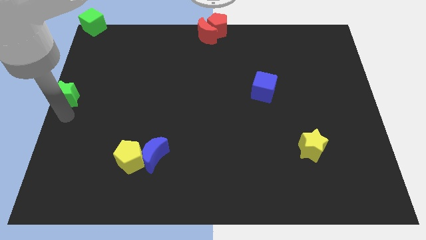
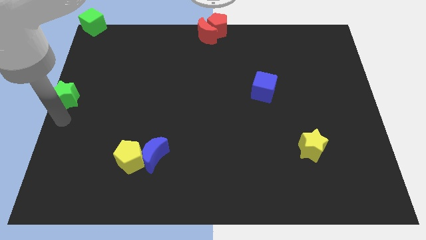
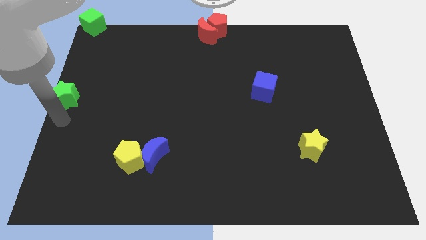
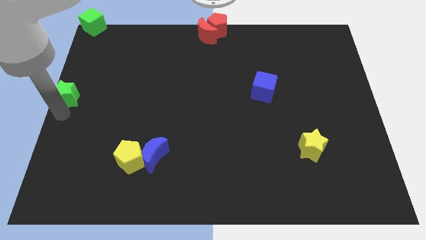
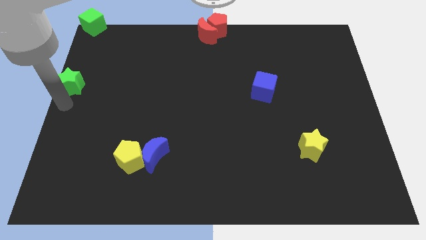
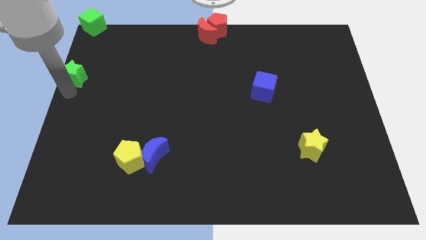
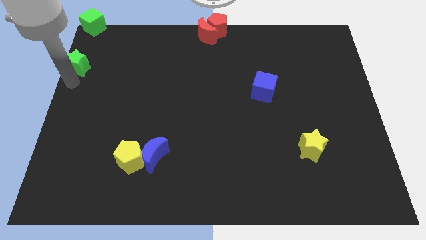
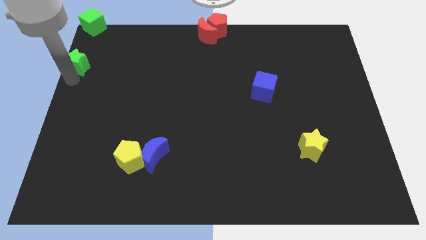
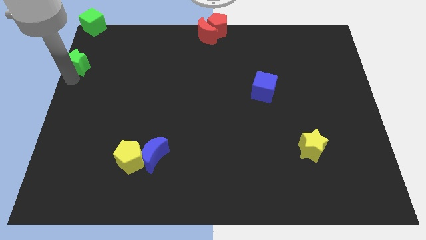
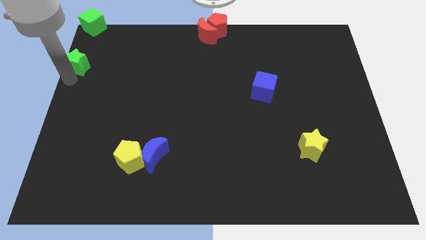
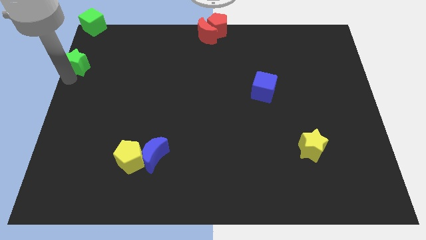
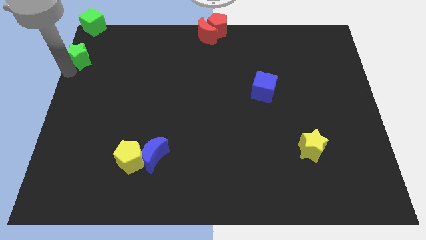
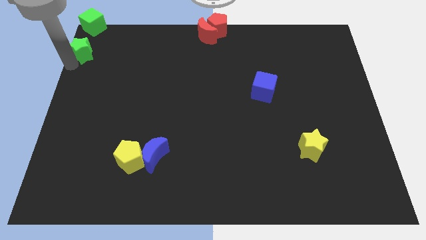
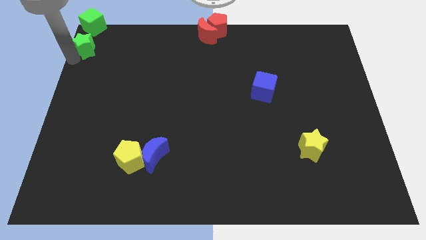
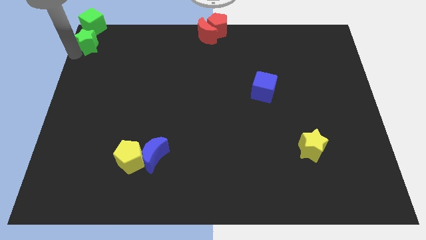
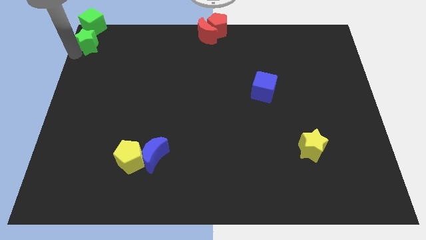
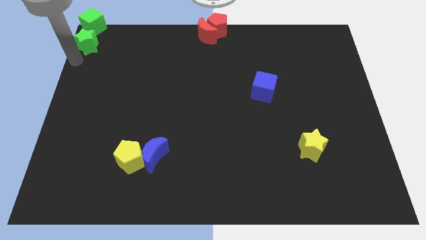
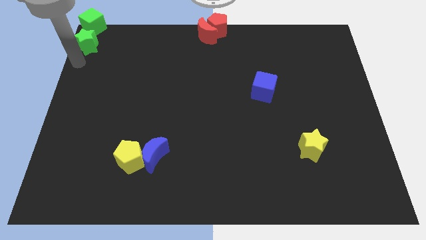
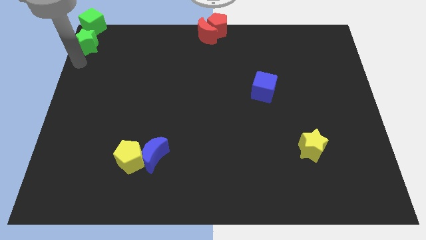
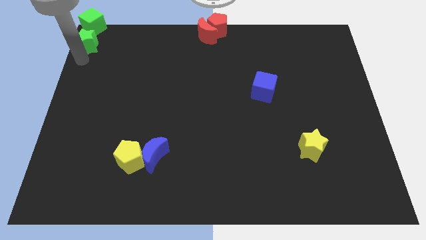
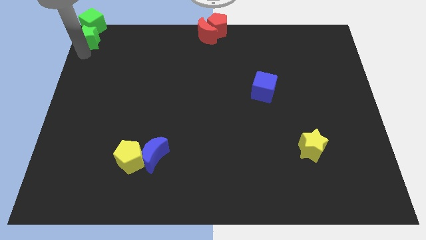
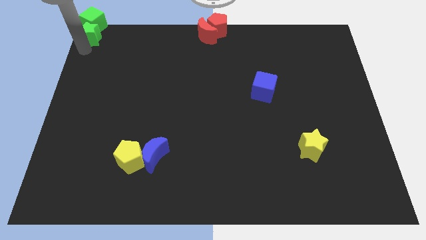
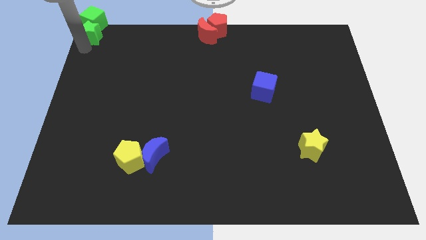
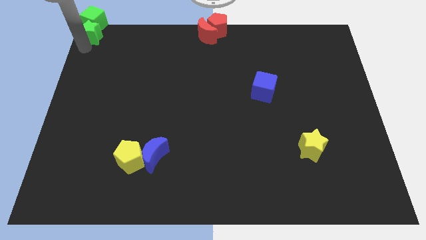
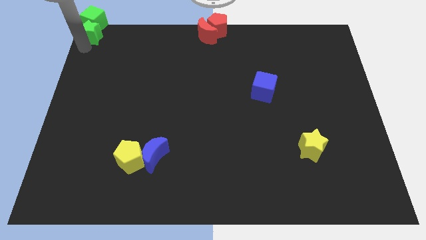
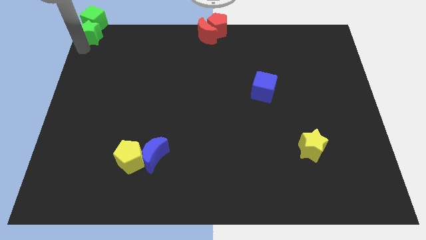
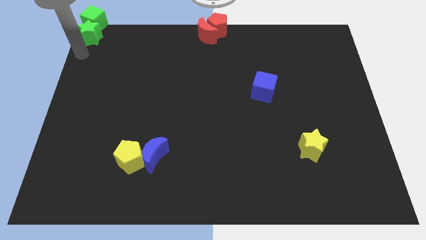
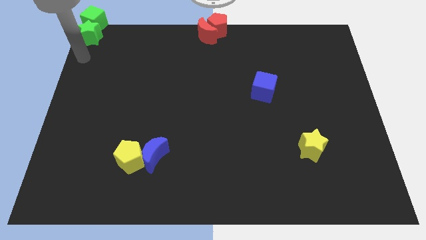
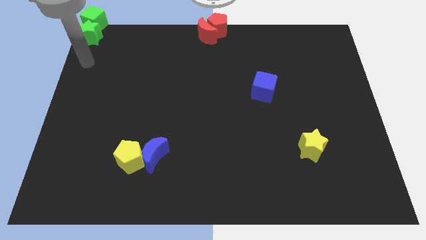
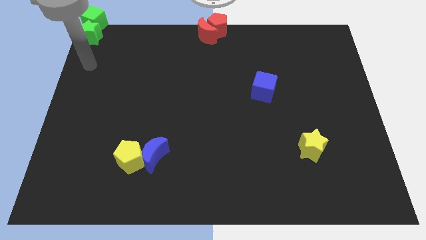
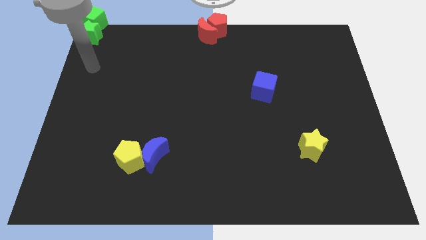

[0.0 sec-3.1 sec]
move the green star into green cube

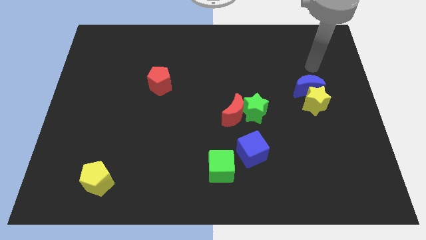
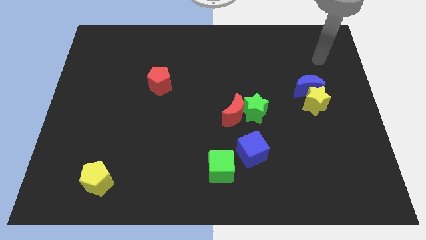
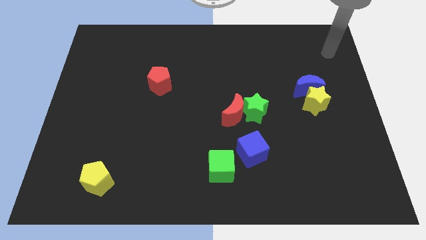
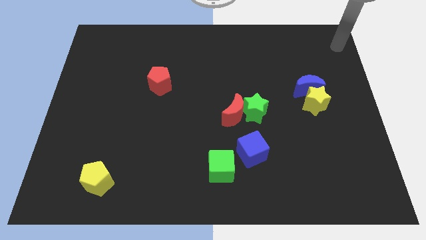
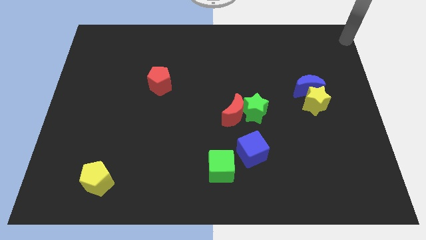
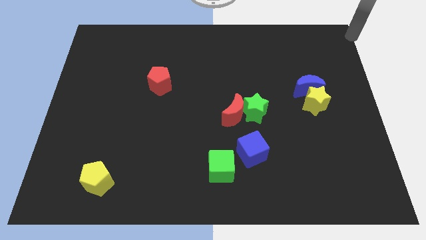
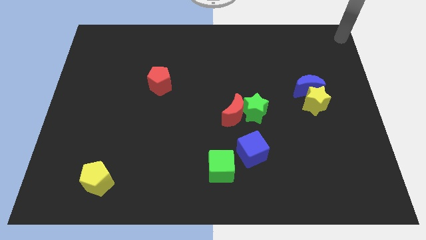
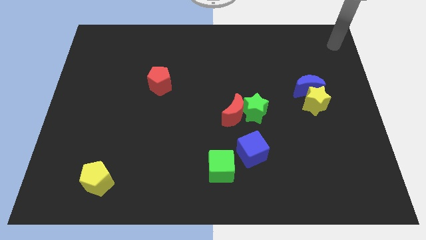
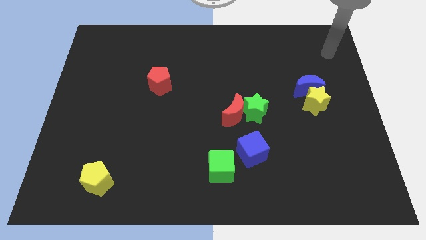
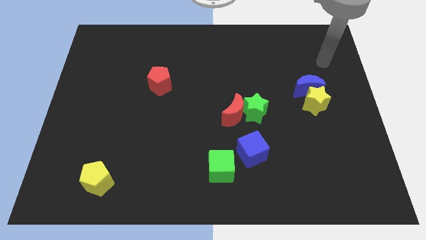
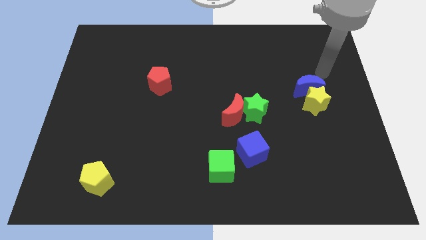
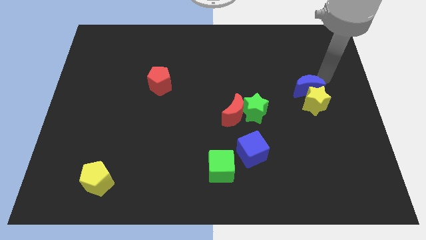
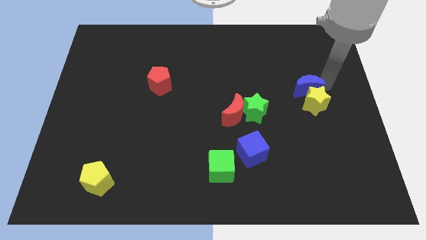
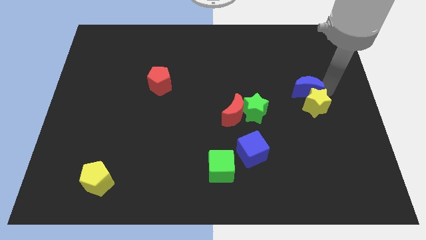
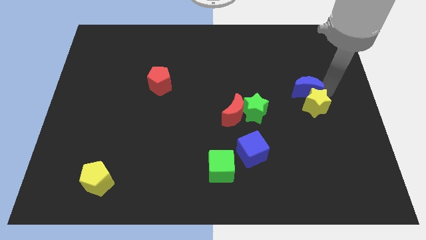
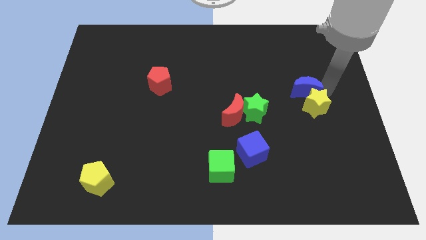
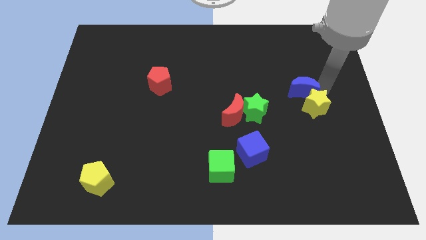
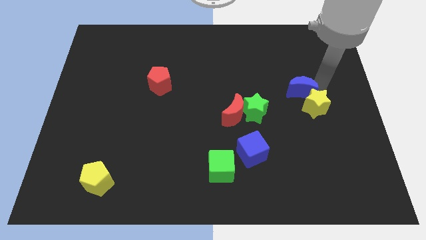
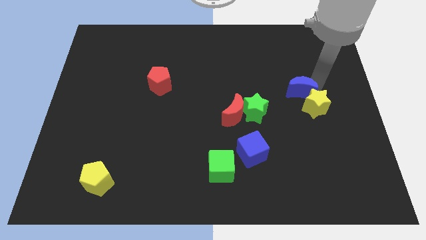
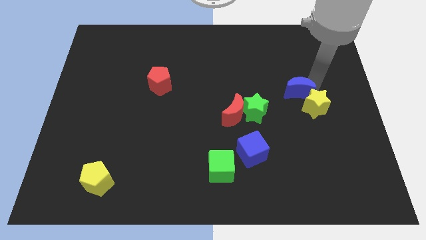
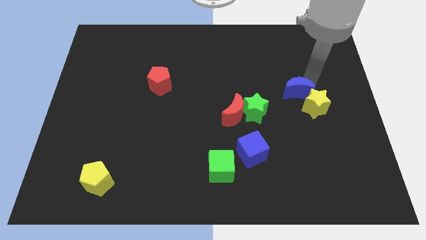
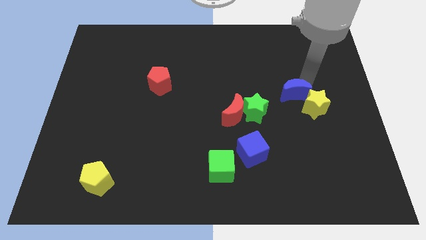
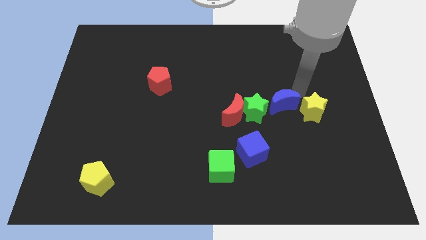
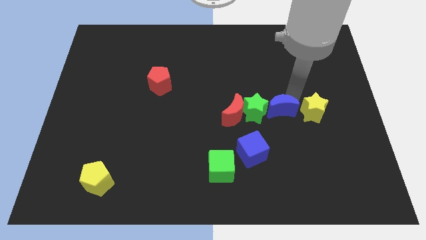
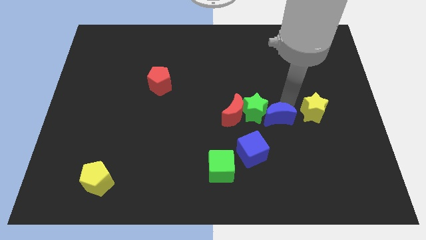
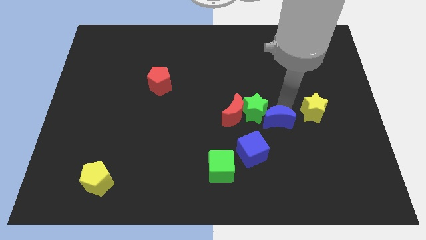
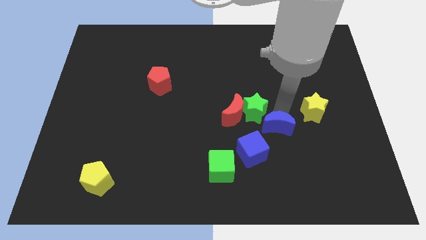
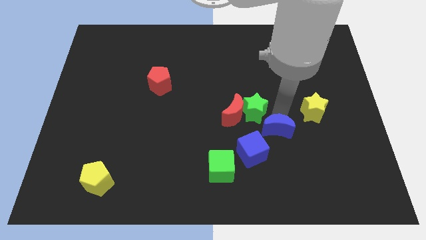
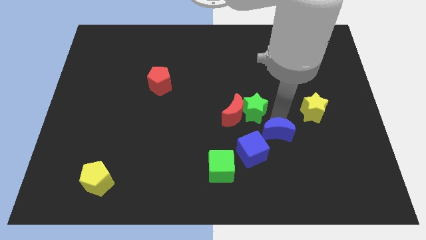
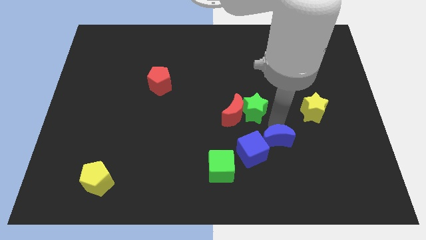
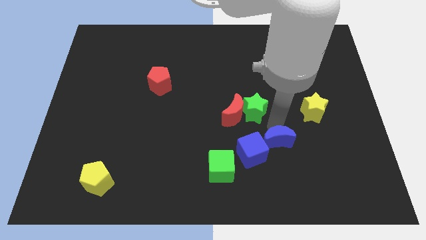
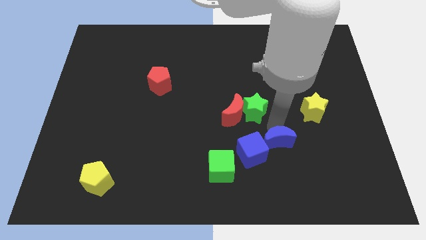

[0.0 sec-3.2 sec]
separate the blue crescent from the yellow star

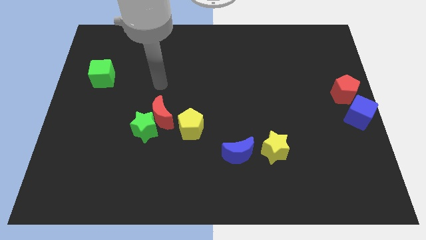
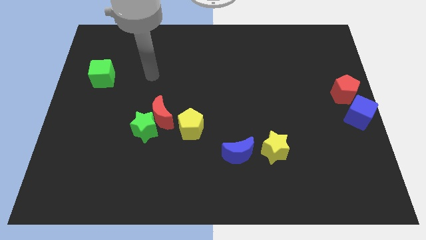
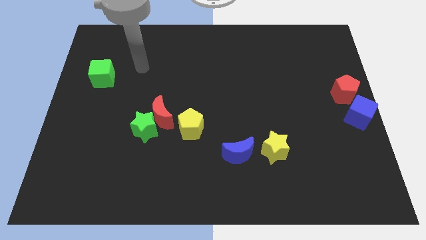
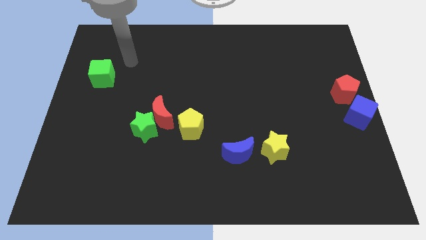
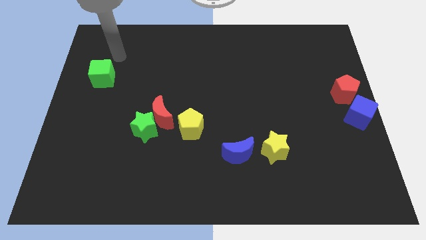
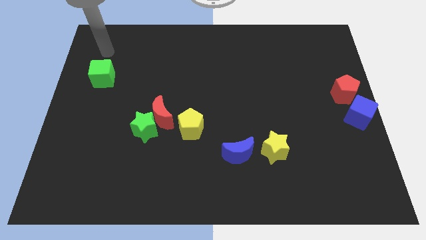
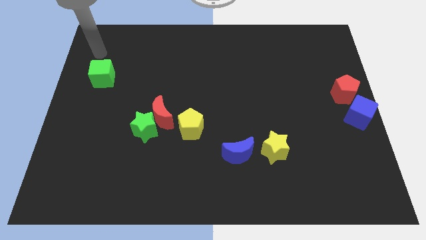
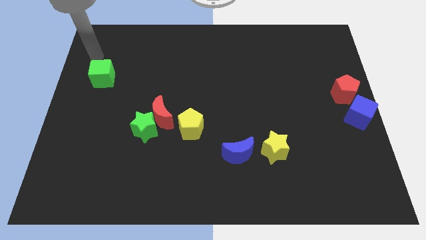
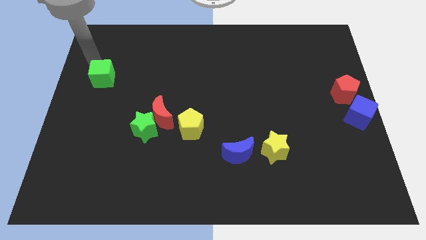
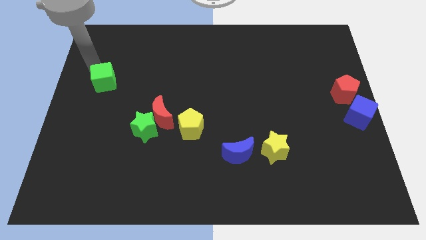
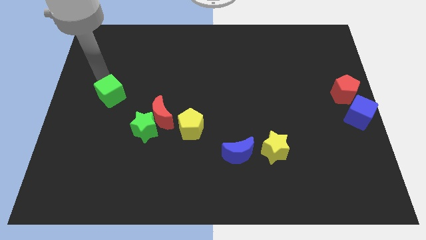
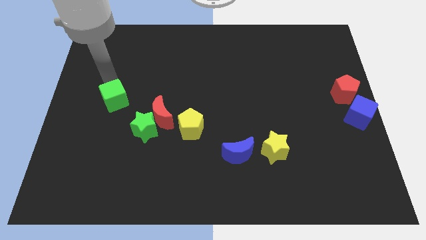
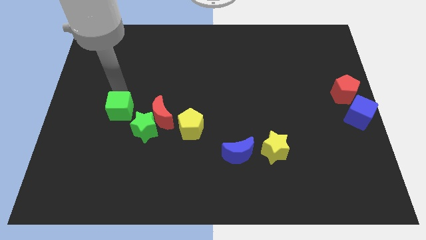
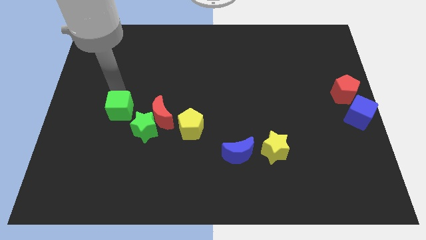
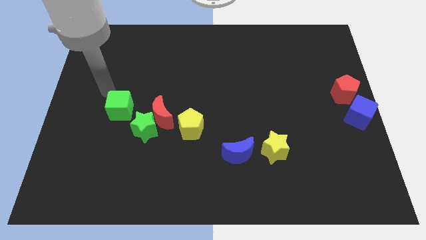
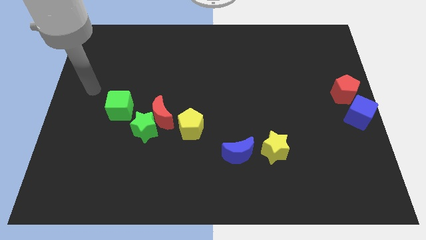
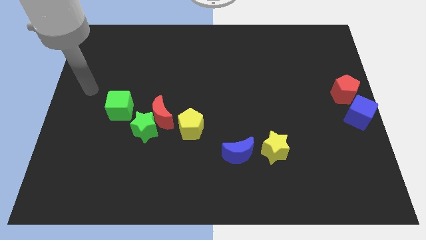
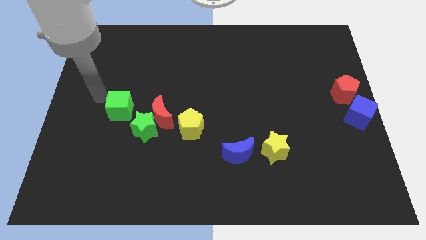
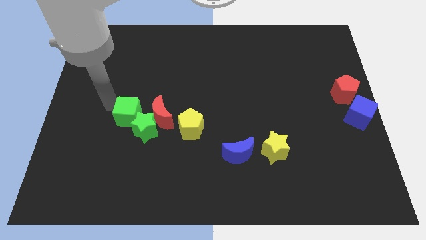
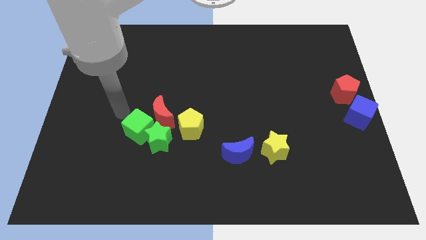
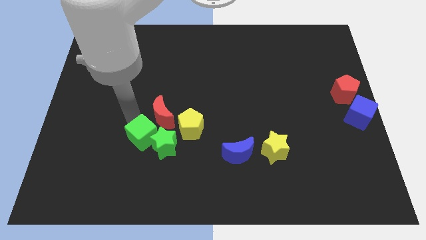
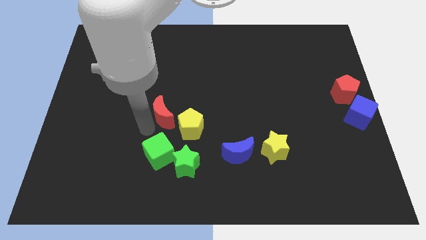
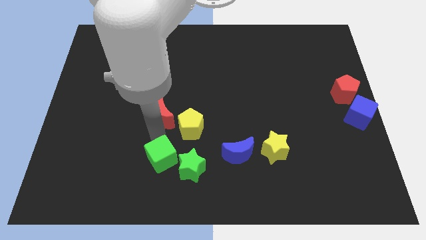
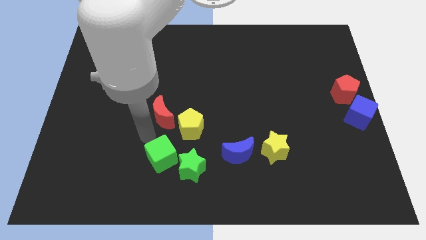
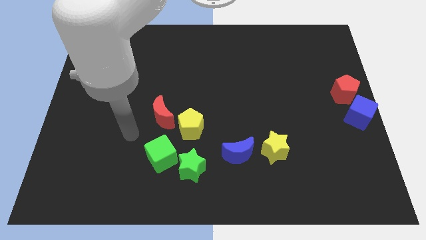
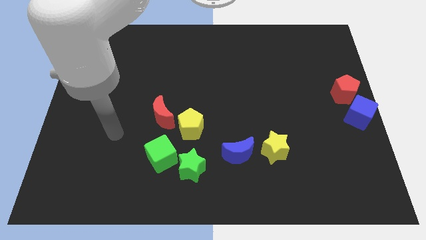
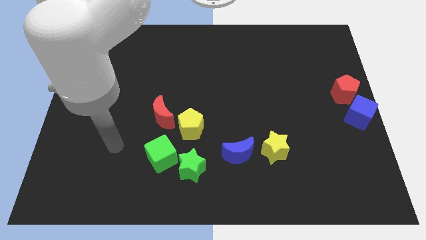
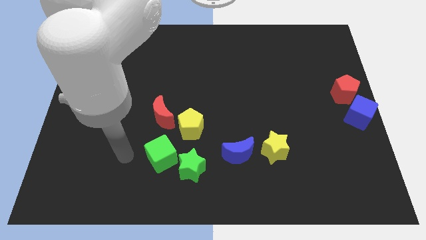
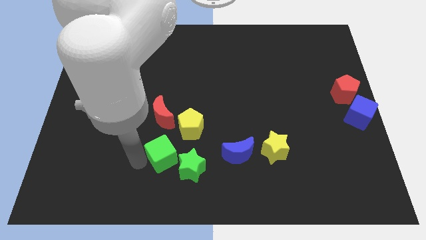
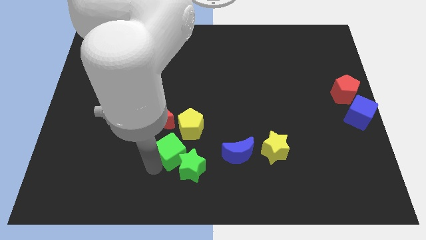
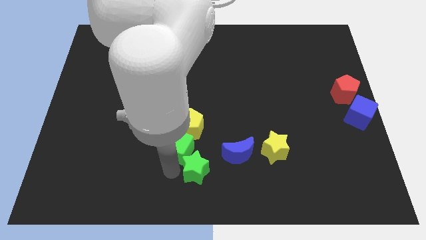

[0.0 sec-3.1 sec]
move the green blocks to the bottom side of the yellow pentagon
